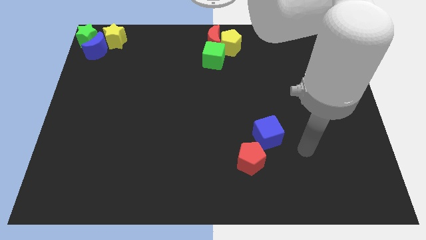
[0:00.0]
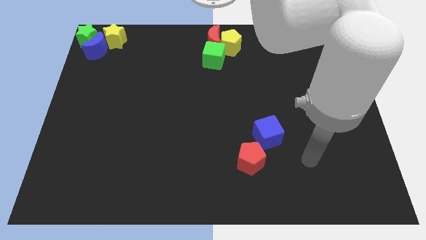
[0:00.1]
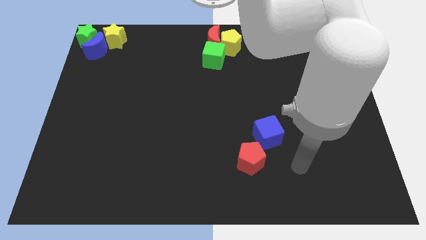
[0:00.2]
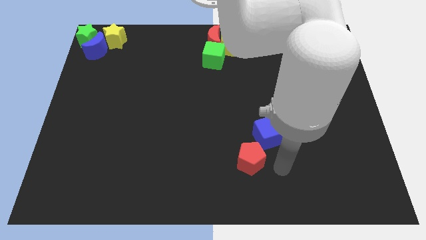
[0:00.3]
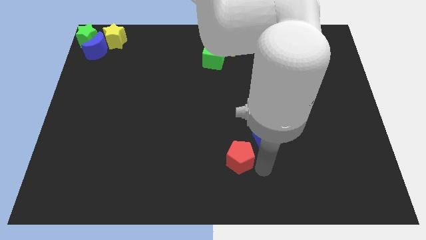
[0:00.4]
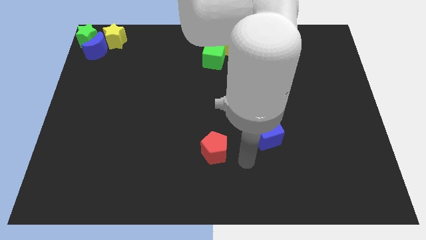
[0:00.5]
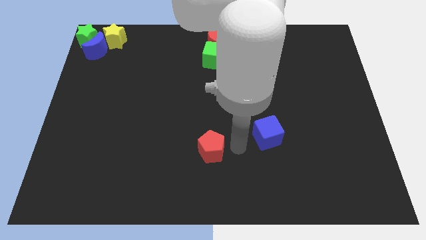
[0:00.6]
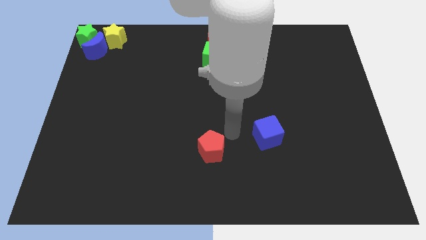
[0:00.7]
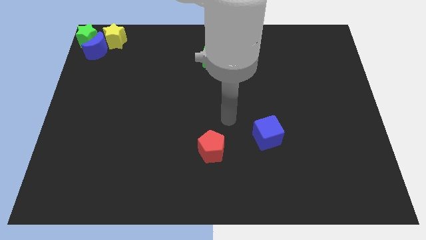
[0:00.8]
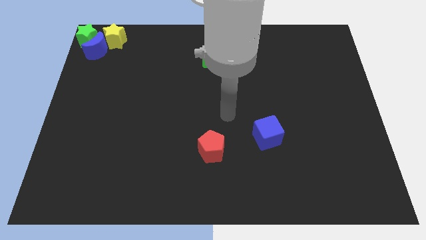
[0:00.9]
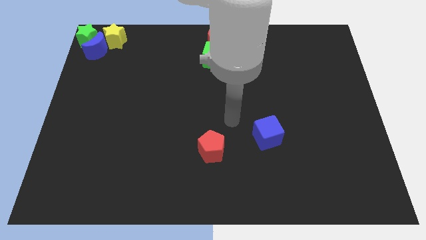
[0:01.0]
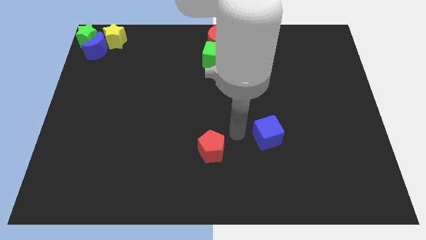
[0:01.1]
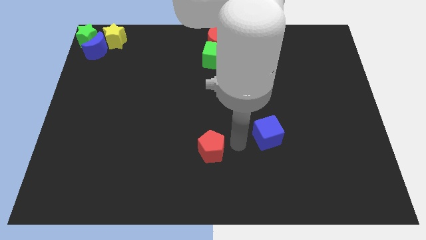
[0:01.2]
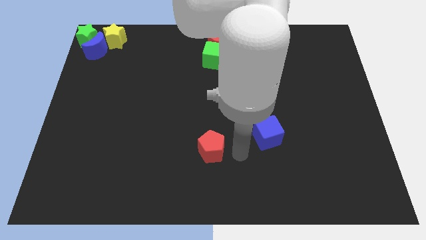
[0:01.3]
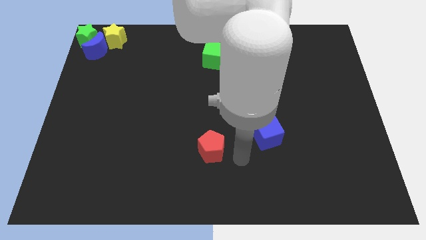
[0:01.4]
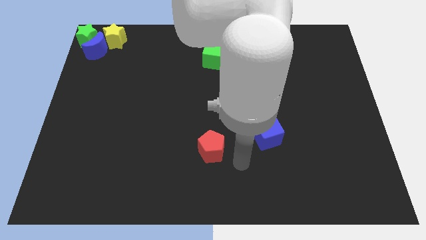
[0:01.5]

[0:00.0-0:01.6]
push red pentagon and blue cube apart

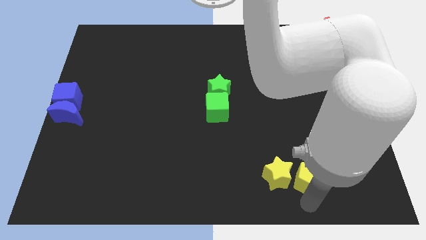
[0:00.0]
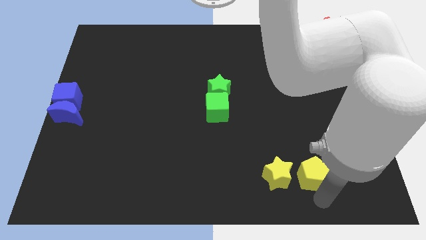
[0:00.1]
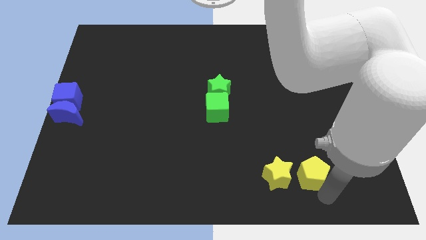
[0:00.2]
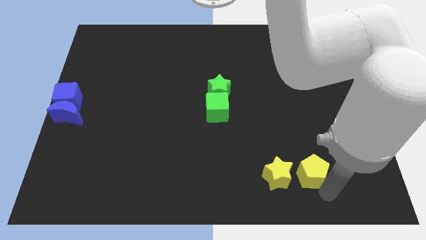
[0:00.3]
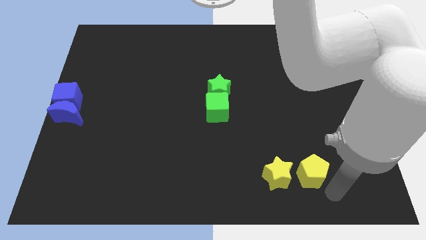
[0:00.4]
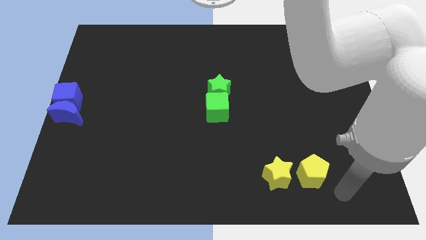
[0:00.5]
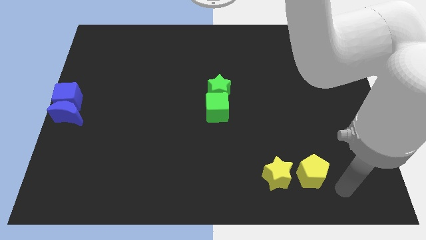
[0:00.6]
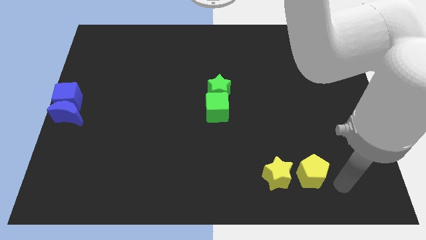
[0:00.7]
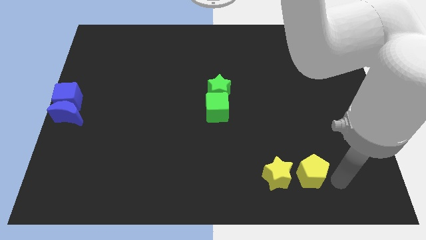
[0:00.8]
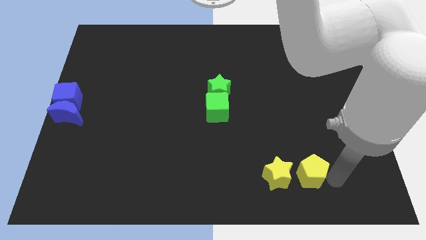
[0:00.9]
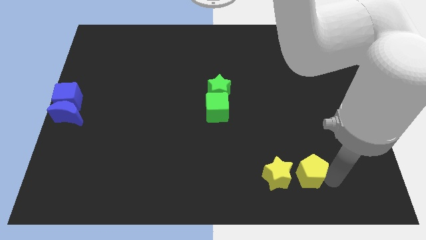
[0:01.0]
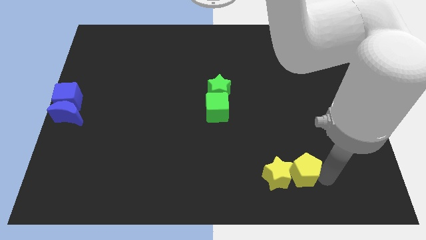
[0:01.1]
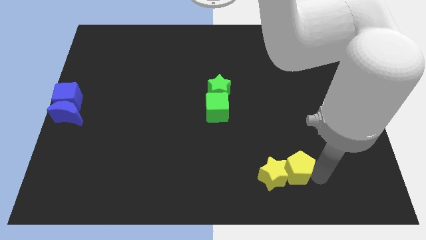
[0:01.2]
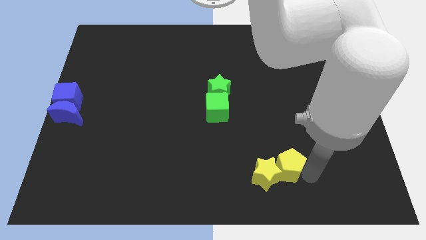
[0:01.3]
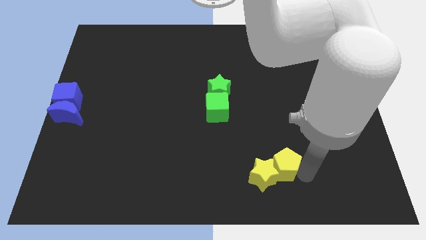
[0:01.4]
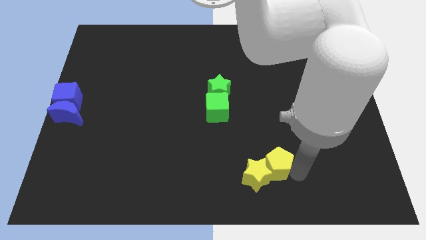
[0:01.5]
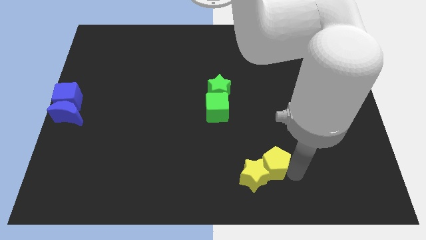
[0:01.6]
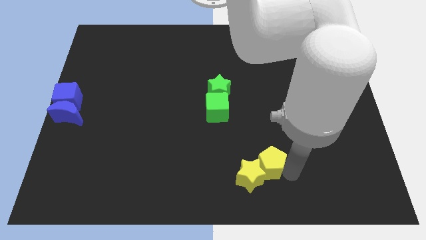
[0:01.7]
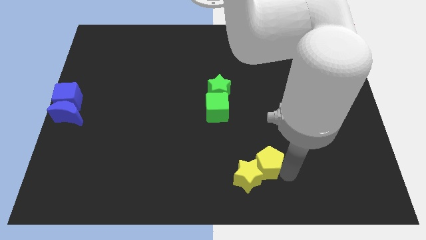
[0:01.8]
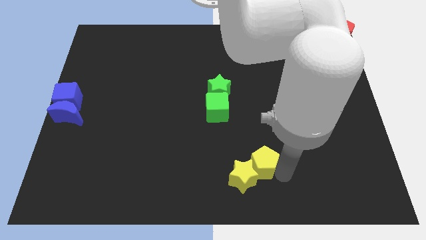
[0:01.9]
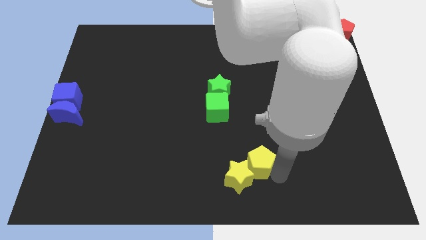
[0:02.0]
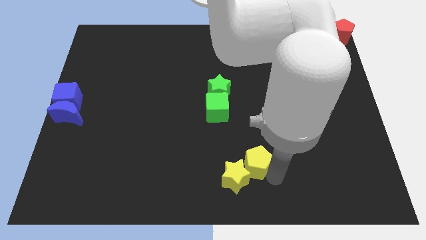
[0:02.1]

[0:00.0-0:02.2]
move the yellow pentagon into yellow star

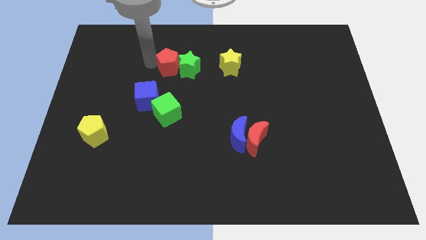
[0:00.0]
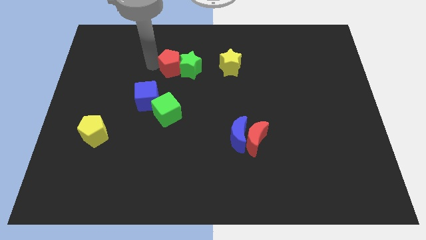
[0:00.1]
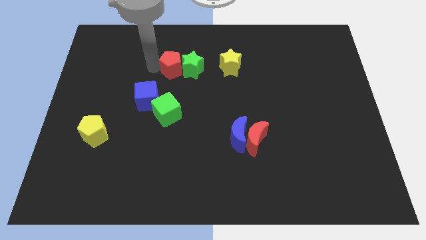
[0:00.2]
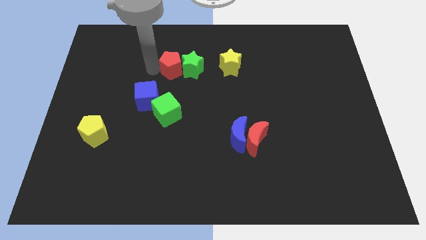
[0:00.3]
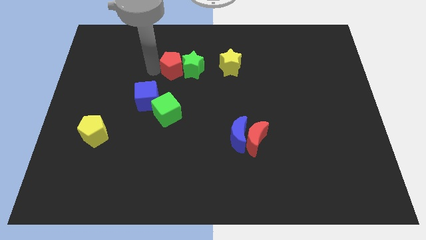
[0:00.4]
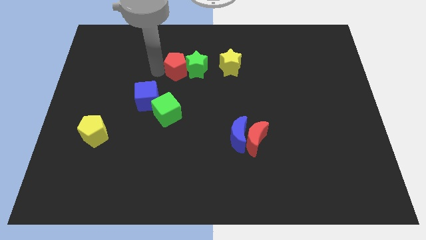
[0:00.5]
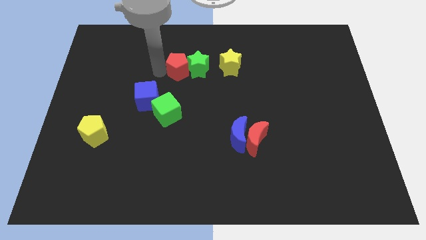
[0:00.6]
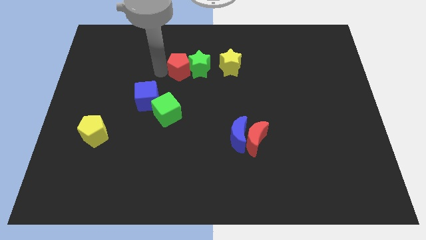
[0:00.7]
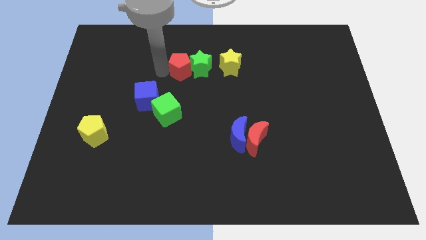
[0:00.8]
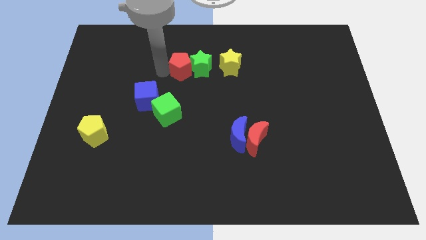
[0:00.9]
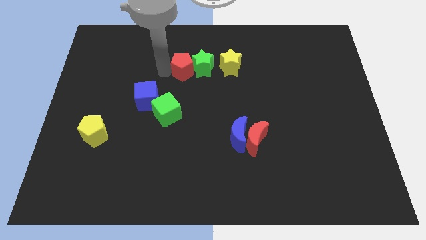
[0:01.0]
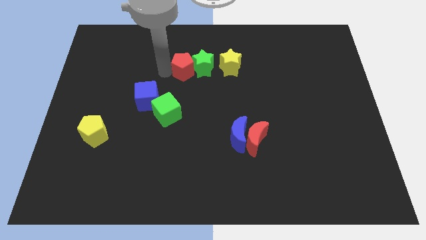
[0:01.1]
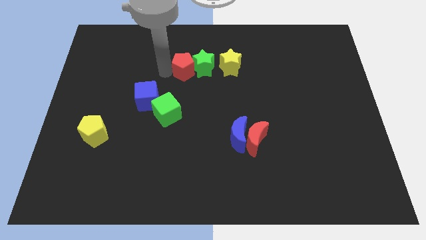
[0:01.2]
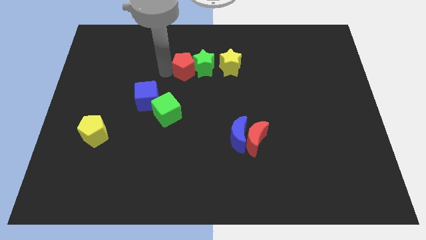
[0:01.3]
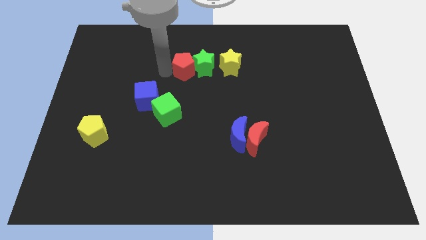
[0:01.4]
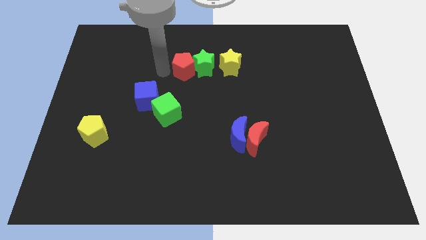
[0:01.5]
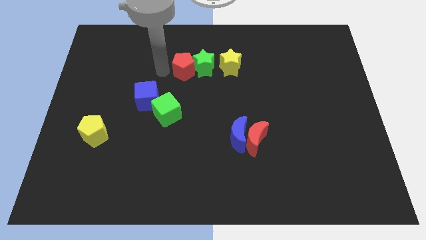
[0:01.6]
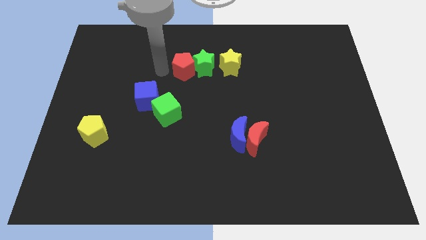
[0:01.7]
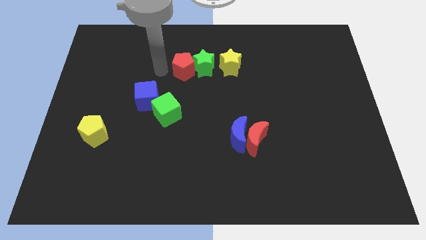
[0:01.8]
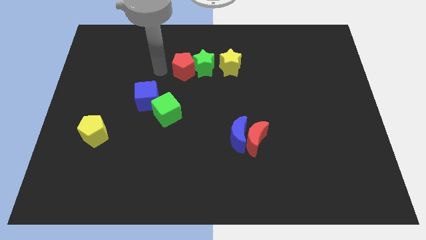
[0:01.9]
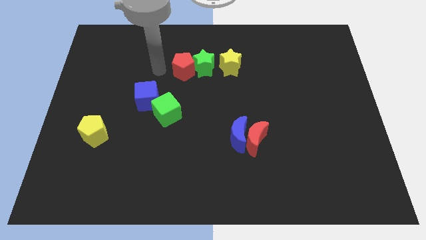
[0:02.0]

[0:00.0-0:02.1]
push green star and red pentagon together to its right

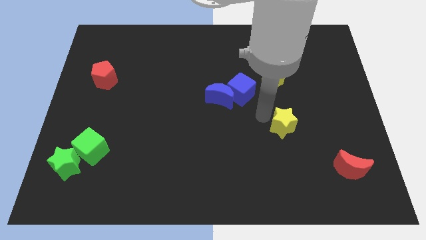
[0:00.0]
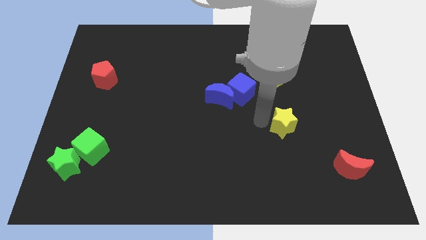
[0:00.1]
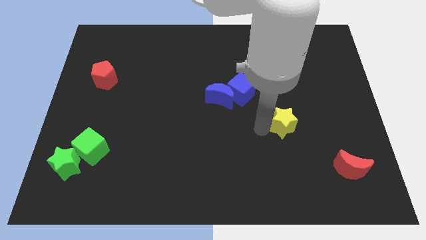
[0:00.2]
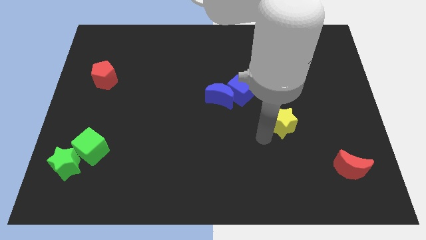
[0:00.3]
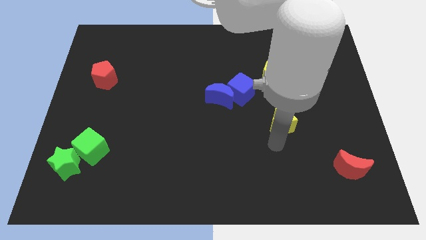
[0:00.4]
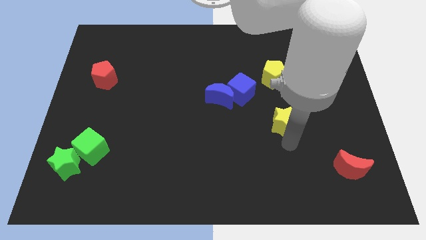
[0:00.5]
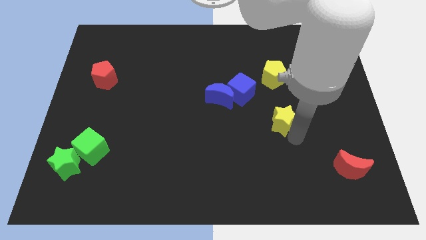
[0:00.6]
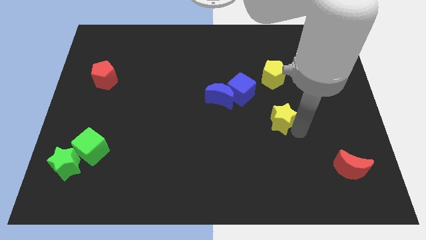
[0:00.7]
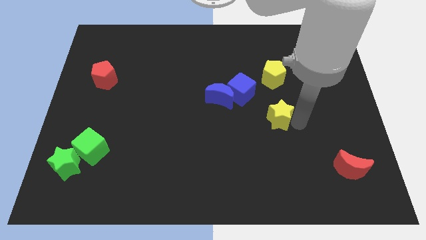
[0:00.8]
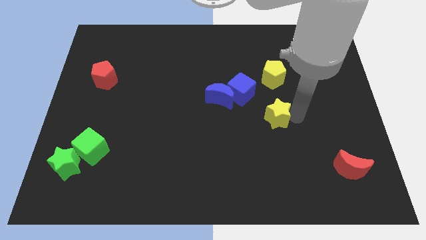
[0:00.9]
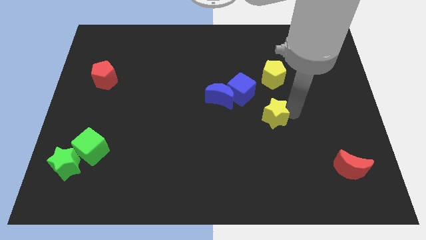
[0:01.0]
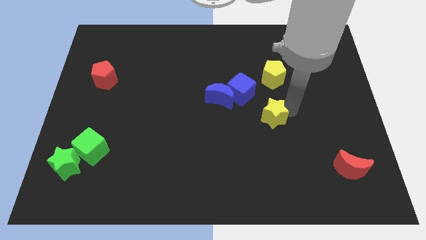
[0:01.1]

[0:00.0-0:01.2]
move the yellow star slightly to the left

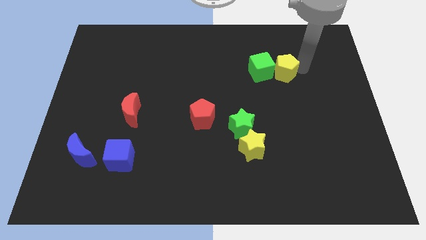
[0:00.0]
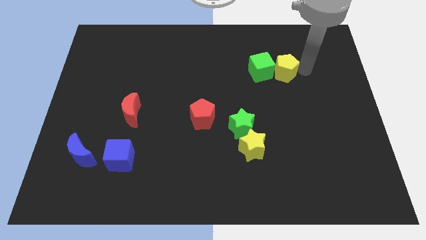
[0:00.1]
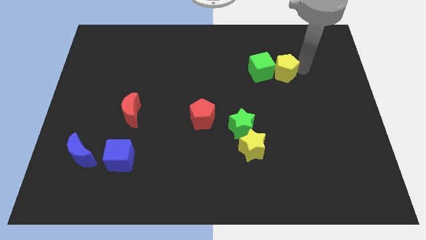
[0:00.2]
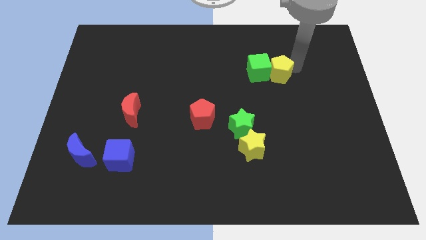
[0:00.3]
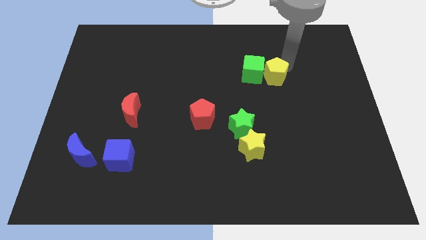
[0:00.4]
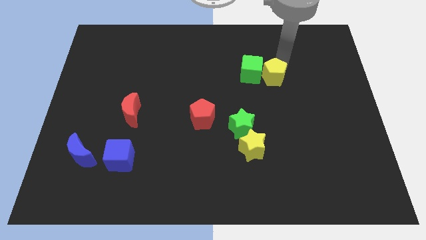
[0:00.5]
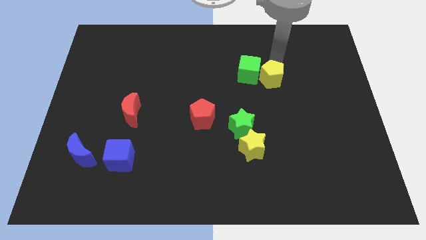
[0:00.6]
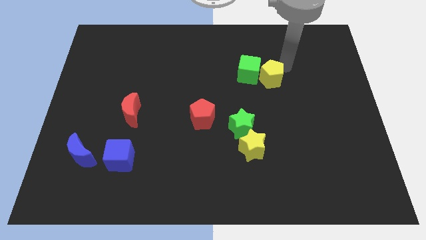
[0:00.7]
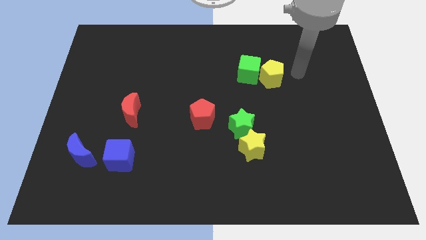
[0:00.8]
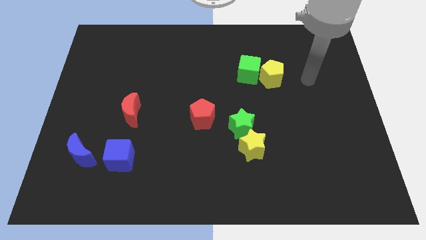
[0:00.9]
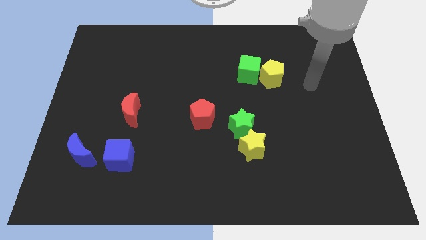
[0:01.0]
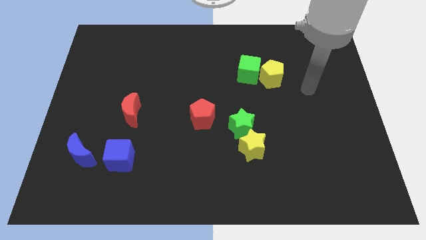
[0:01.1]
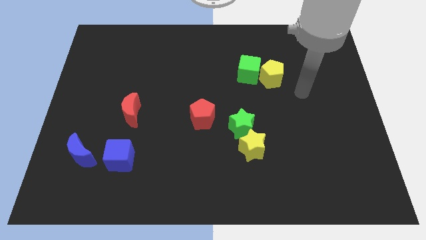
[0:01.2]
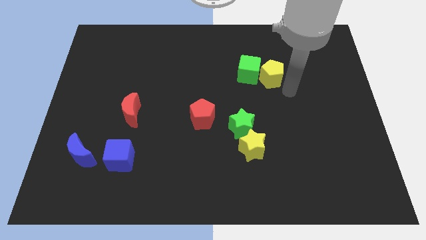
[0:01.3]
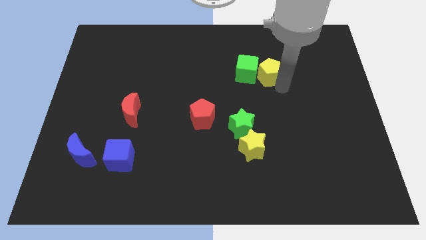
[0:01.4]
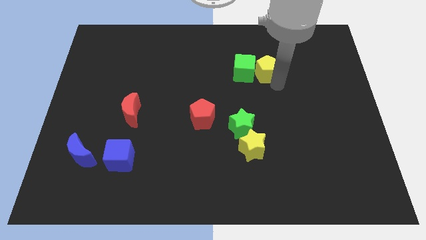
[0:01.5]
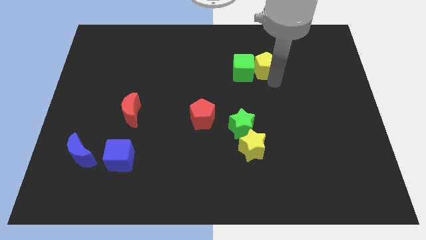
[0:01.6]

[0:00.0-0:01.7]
push the green cube with the help of yellow pentagon slightly to the left
